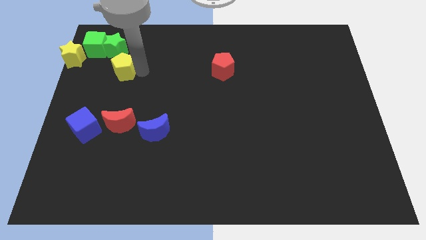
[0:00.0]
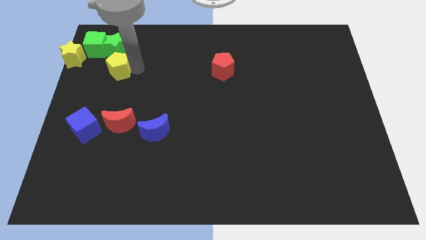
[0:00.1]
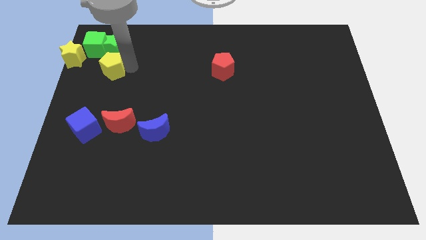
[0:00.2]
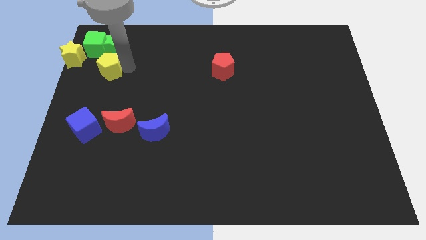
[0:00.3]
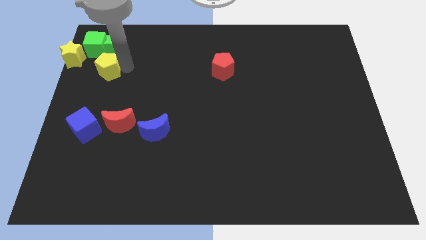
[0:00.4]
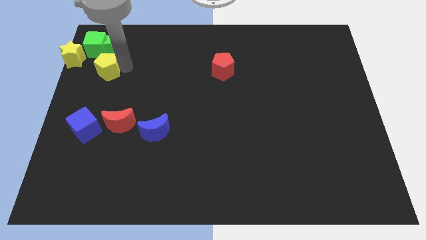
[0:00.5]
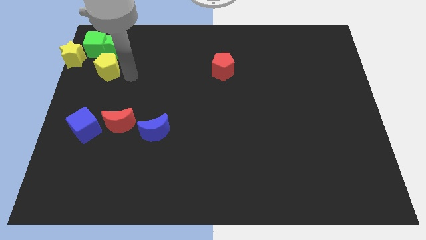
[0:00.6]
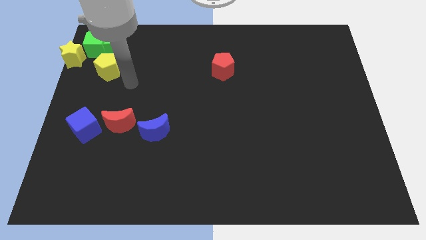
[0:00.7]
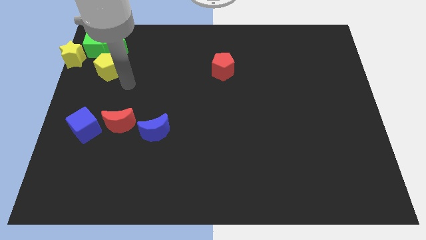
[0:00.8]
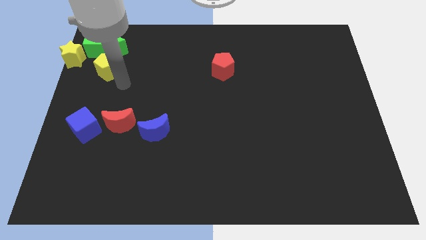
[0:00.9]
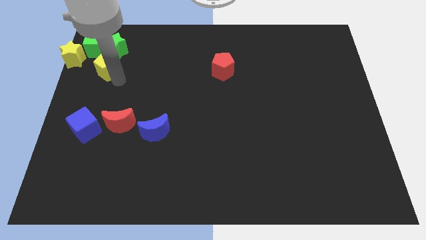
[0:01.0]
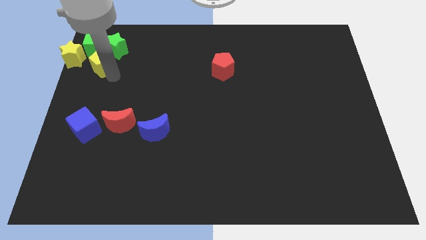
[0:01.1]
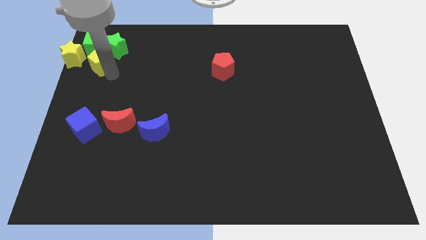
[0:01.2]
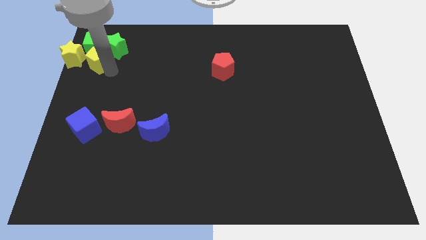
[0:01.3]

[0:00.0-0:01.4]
place the yellow pentagon at the bottom of green cube

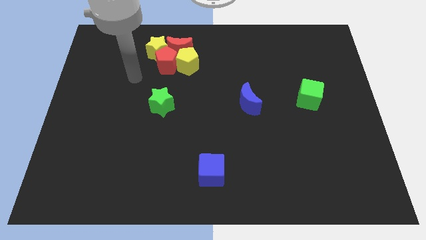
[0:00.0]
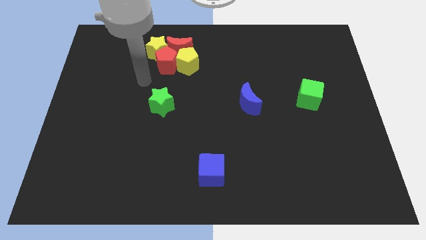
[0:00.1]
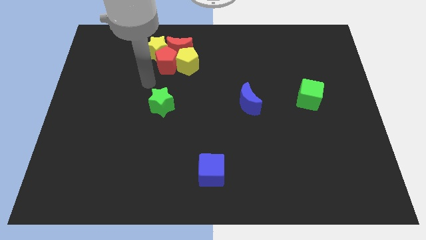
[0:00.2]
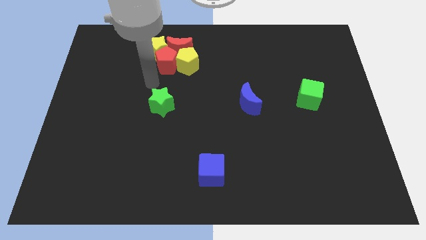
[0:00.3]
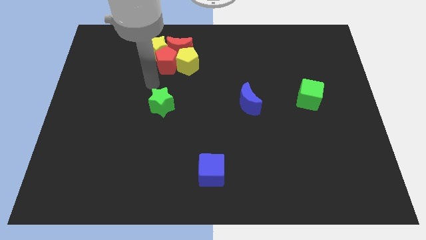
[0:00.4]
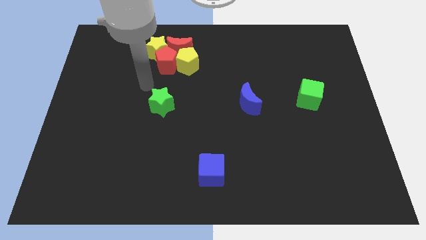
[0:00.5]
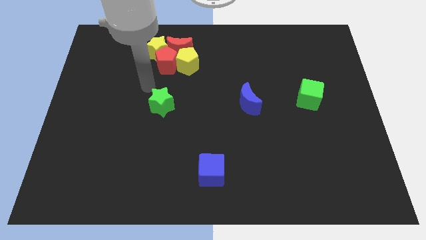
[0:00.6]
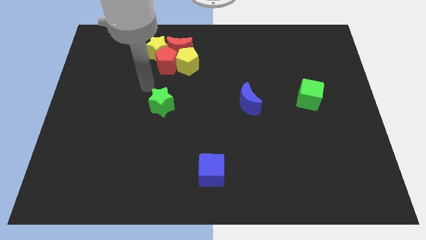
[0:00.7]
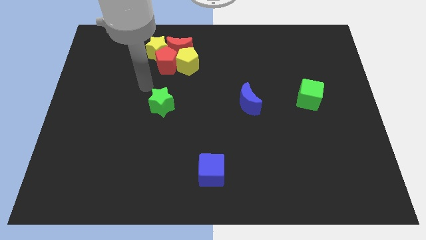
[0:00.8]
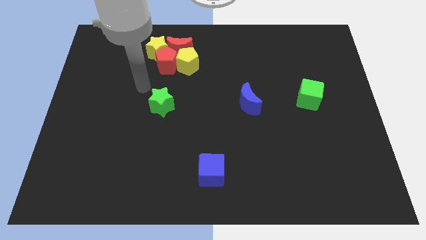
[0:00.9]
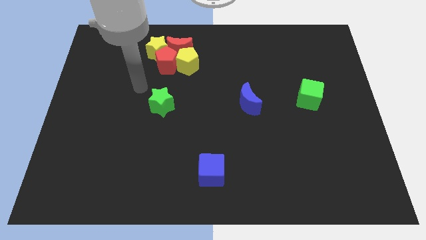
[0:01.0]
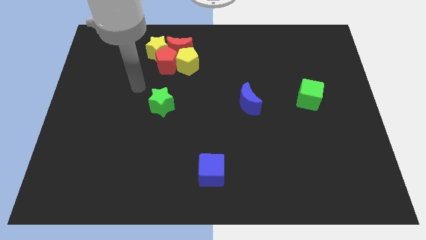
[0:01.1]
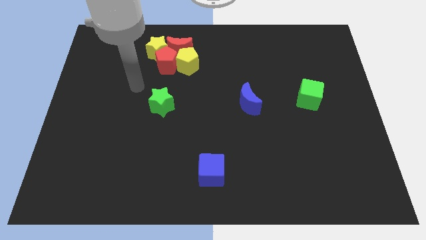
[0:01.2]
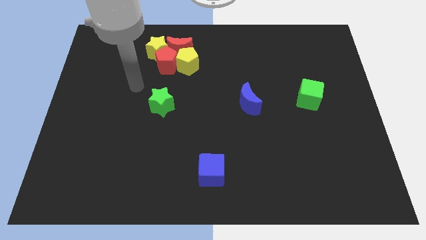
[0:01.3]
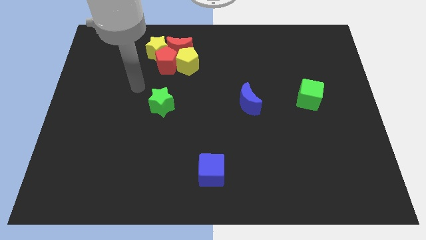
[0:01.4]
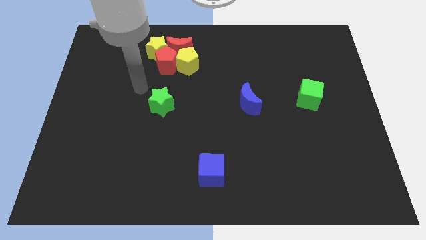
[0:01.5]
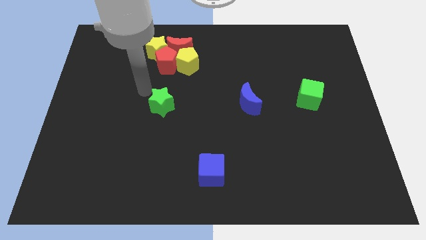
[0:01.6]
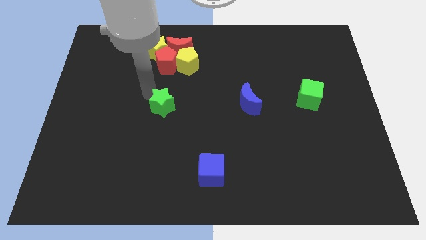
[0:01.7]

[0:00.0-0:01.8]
place your arm above to the green star

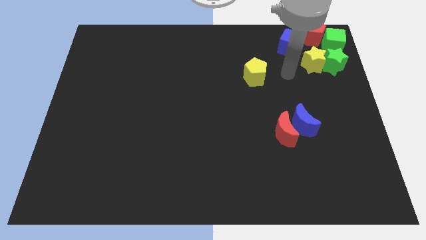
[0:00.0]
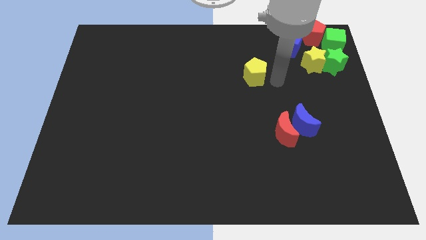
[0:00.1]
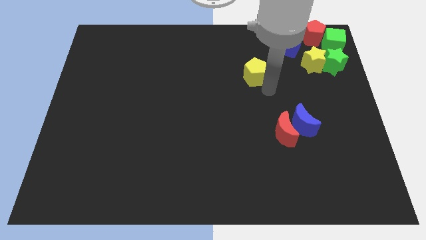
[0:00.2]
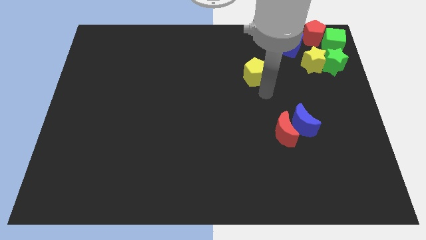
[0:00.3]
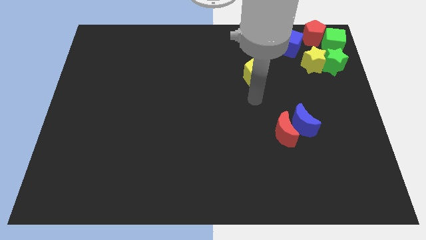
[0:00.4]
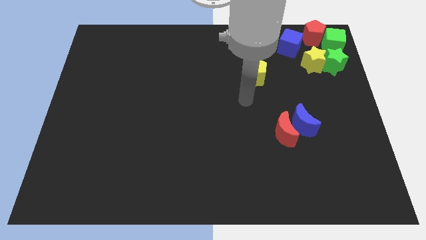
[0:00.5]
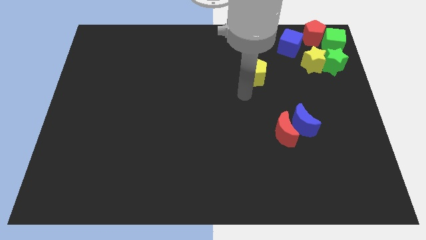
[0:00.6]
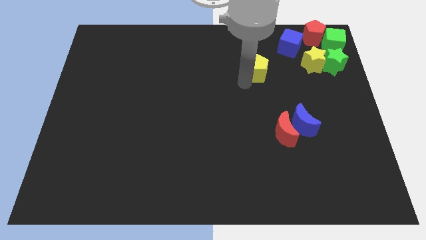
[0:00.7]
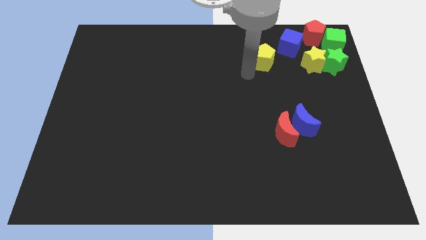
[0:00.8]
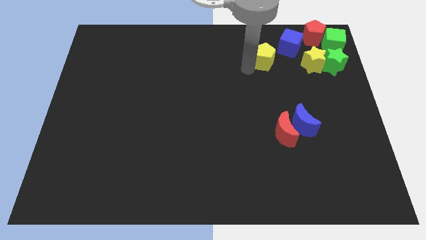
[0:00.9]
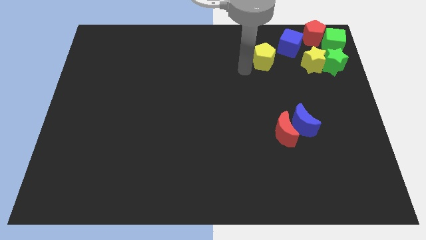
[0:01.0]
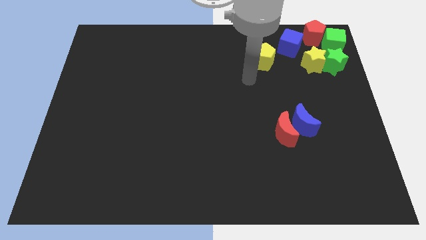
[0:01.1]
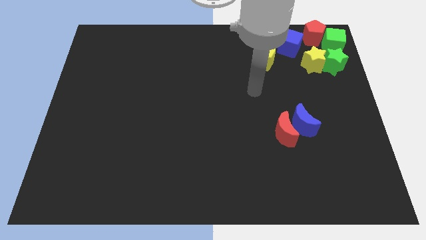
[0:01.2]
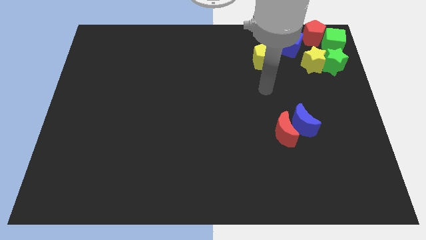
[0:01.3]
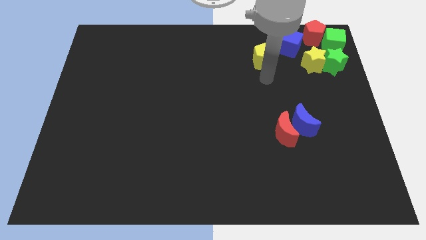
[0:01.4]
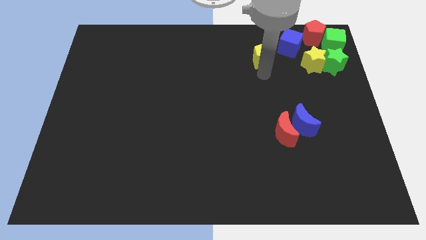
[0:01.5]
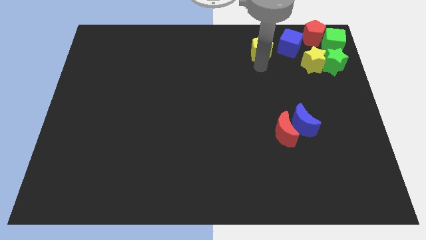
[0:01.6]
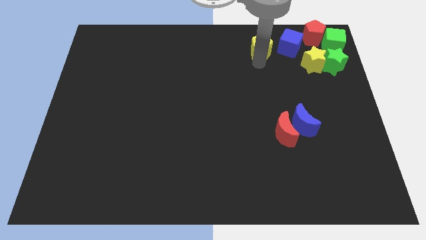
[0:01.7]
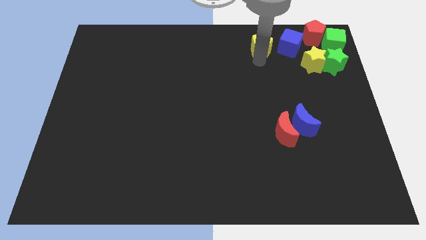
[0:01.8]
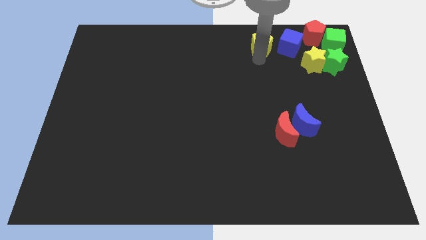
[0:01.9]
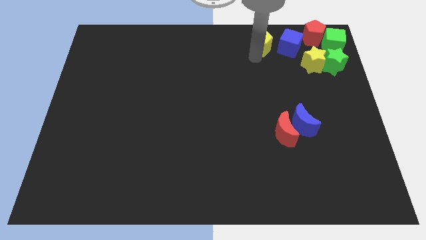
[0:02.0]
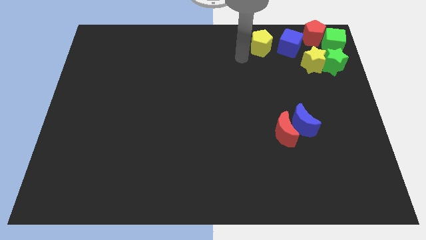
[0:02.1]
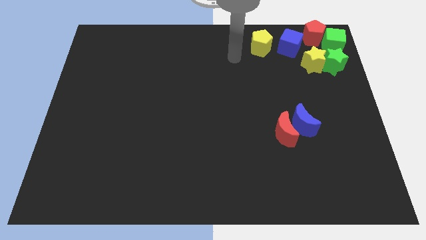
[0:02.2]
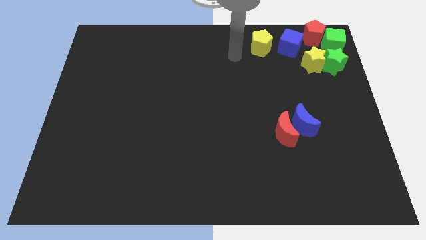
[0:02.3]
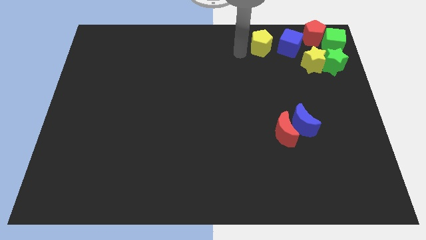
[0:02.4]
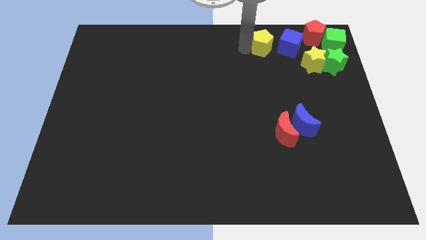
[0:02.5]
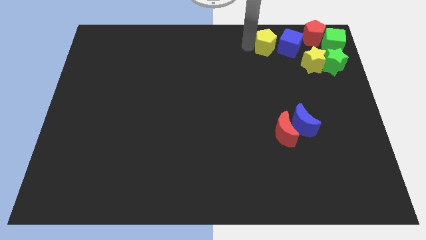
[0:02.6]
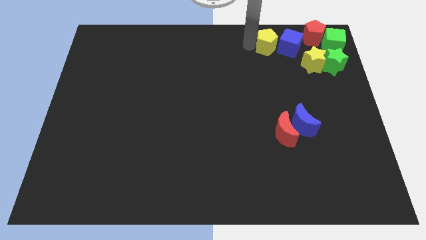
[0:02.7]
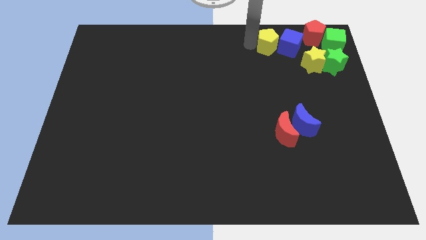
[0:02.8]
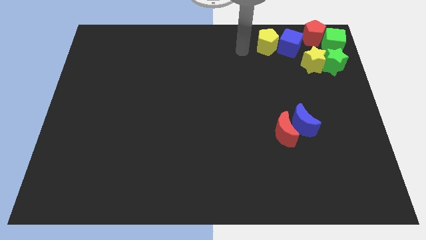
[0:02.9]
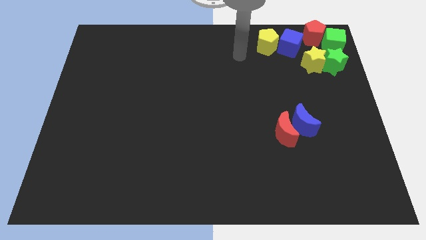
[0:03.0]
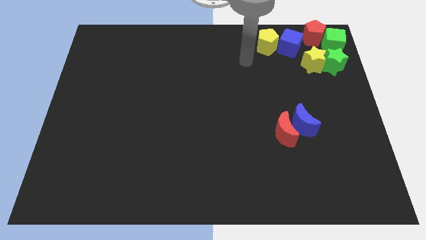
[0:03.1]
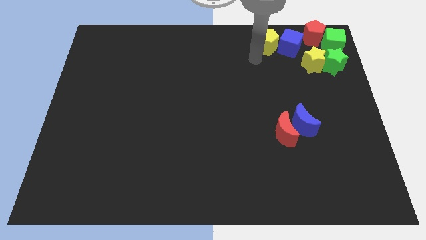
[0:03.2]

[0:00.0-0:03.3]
move the yellow pentagon to the left of the blue cube

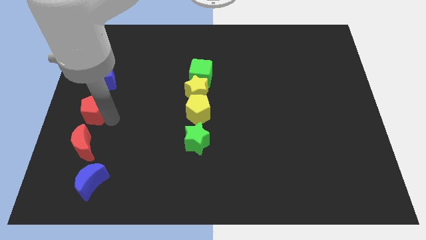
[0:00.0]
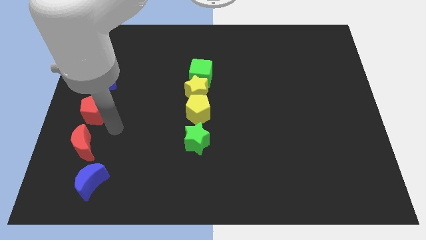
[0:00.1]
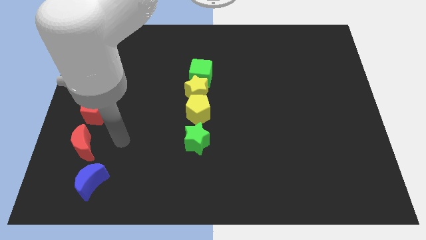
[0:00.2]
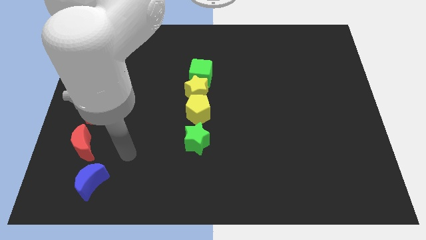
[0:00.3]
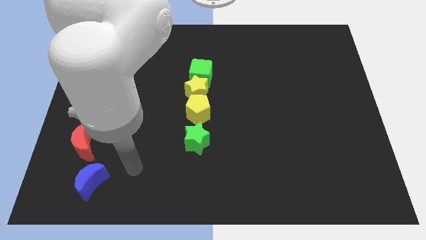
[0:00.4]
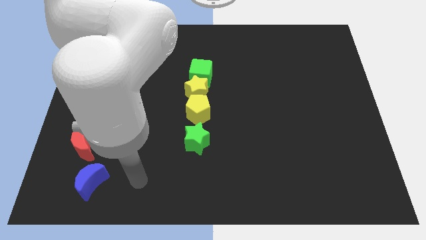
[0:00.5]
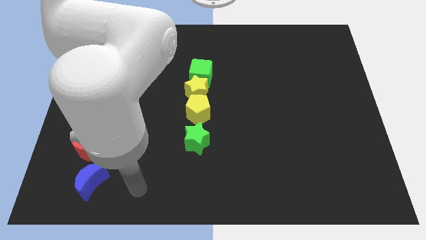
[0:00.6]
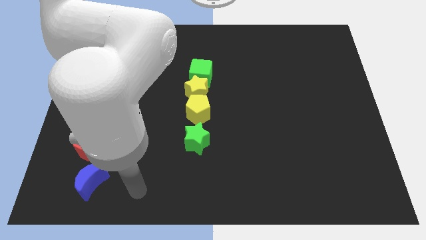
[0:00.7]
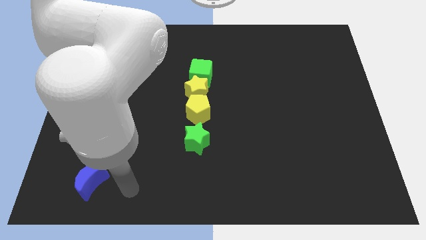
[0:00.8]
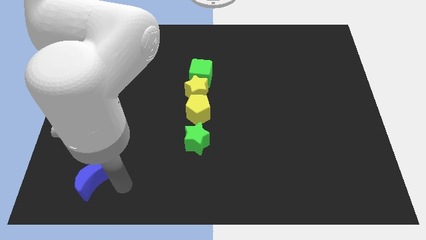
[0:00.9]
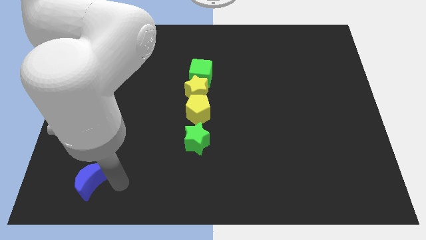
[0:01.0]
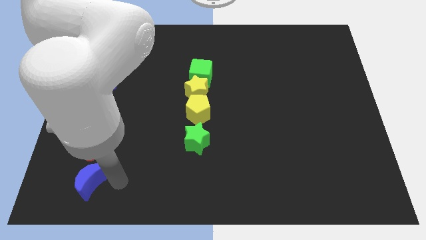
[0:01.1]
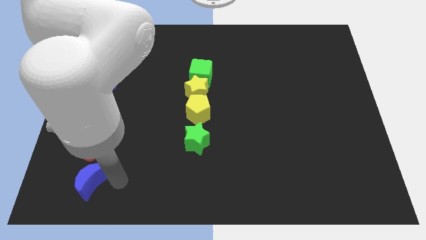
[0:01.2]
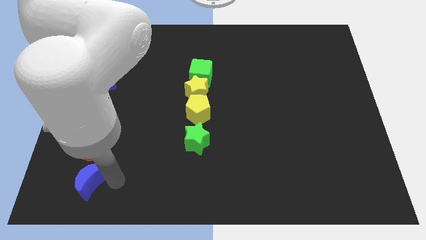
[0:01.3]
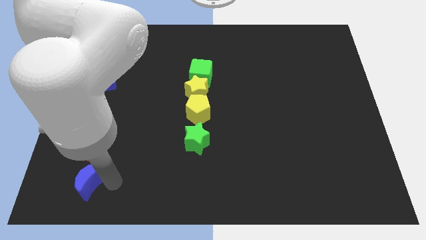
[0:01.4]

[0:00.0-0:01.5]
move your arm towards blue crescent

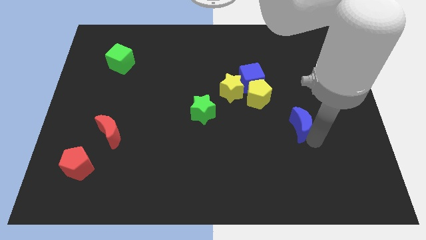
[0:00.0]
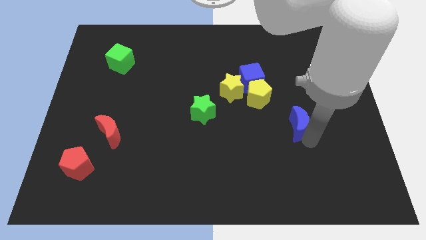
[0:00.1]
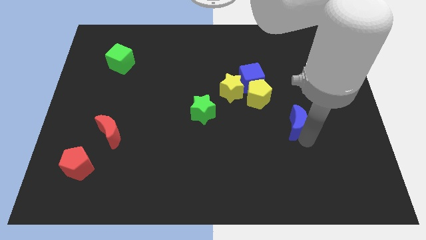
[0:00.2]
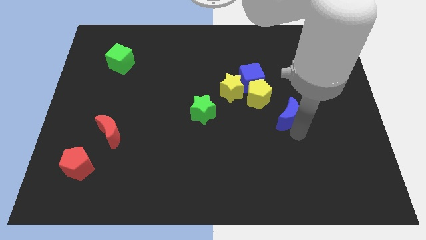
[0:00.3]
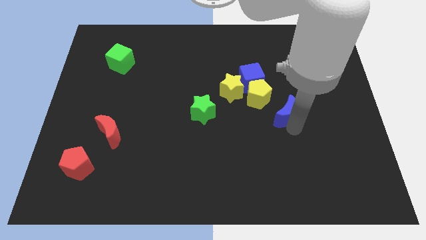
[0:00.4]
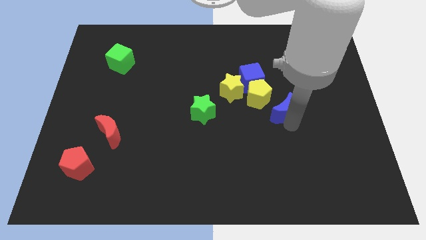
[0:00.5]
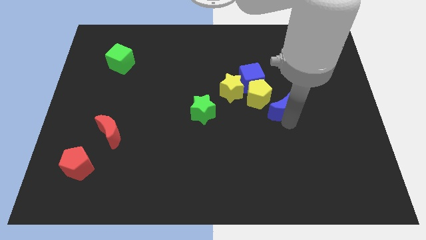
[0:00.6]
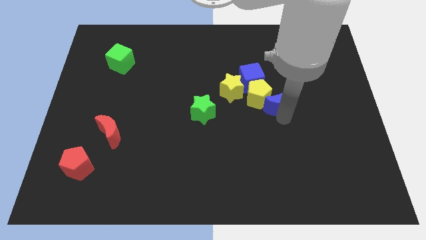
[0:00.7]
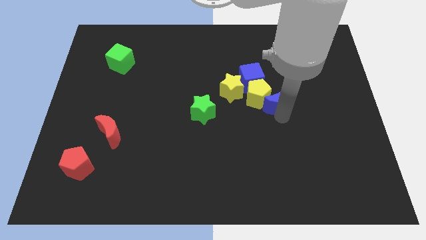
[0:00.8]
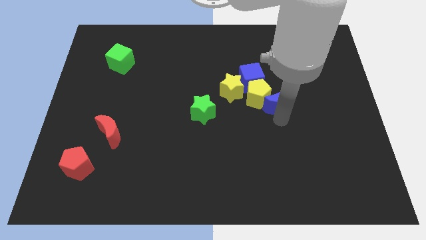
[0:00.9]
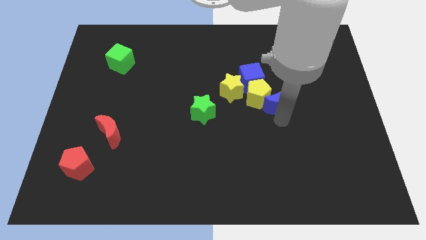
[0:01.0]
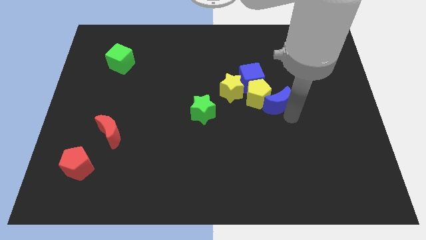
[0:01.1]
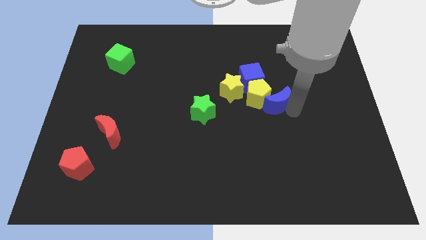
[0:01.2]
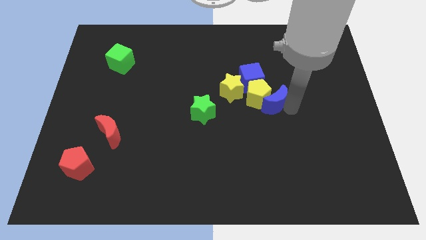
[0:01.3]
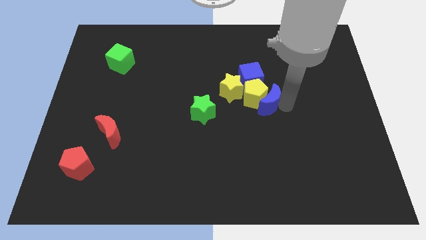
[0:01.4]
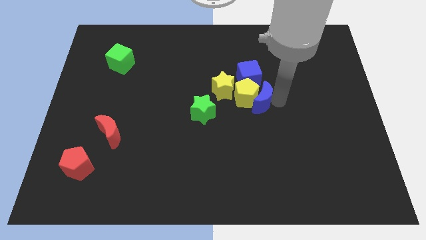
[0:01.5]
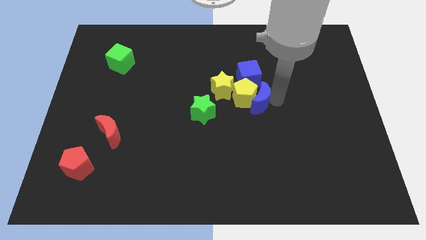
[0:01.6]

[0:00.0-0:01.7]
place the blue moon close to the group of blocks
